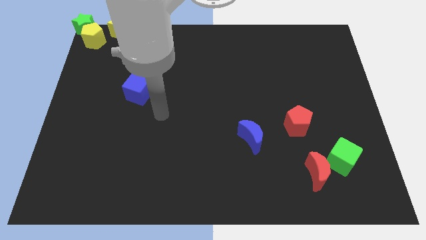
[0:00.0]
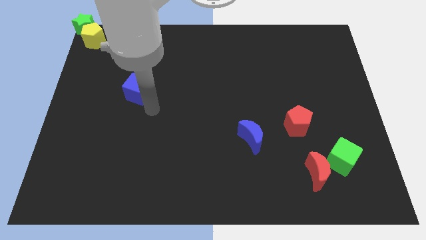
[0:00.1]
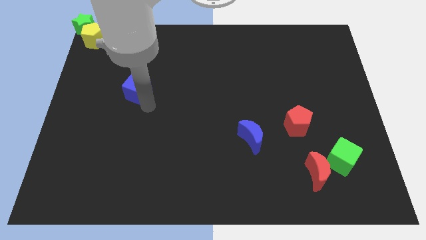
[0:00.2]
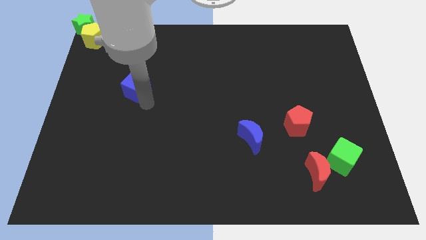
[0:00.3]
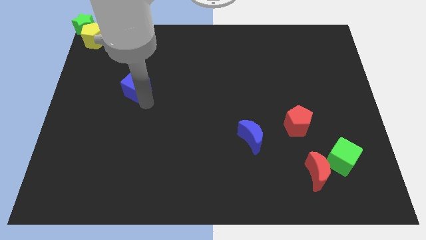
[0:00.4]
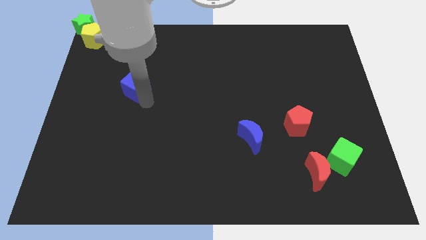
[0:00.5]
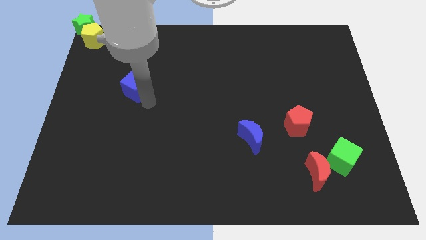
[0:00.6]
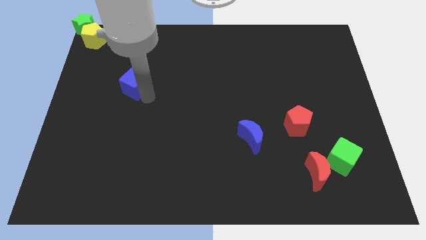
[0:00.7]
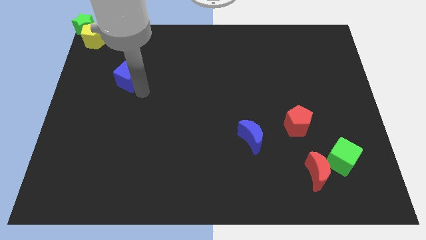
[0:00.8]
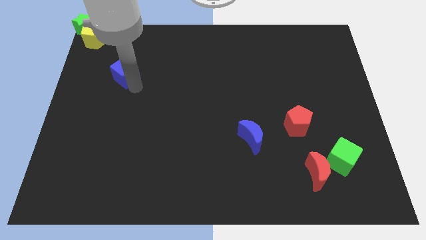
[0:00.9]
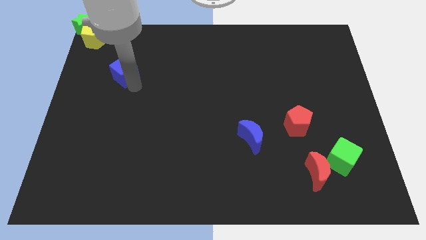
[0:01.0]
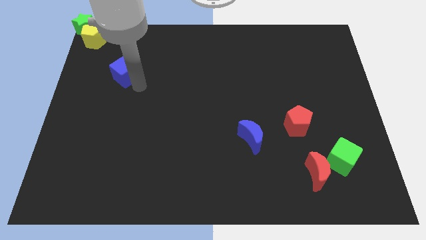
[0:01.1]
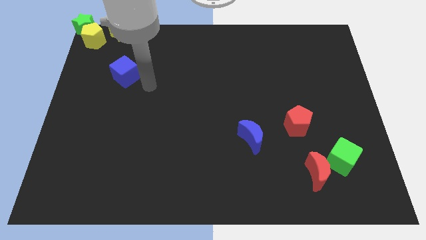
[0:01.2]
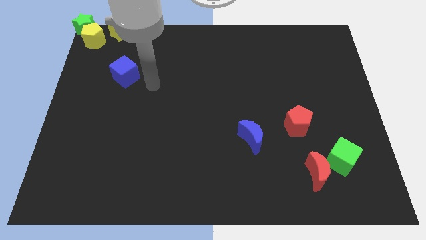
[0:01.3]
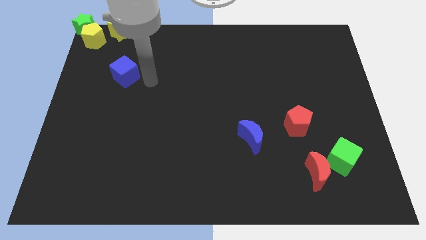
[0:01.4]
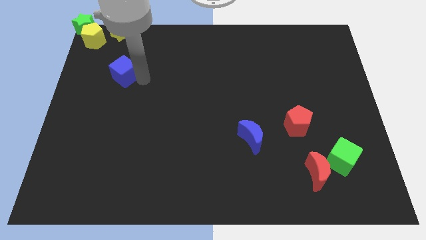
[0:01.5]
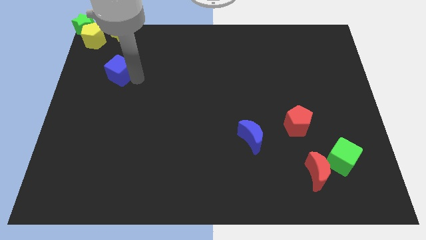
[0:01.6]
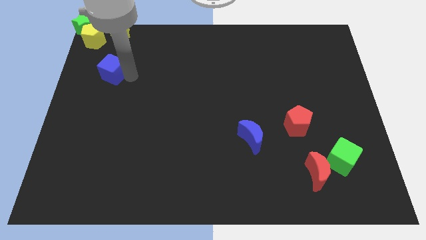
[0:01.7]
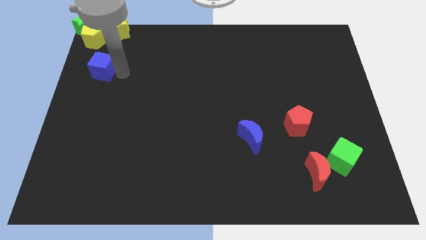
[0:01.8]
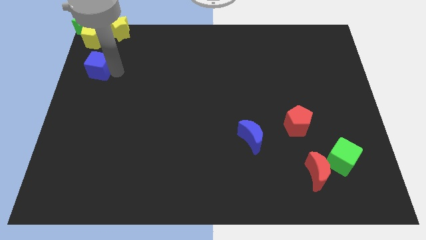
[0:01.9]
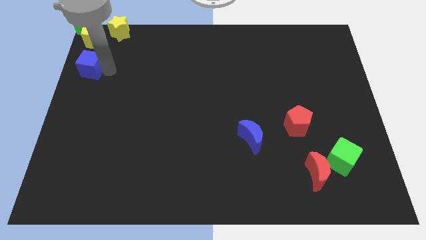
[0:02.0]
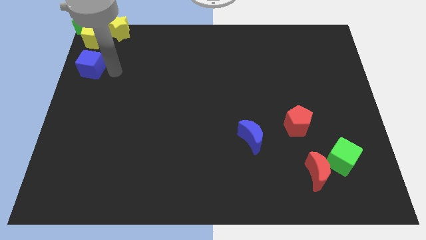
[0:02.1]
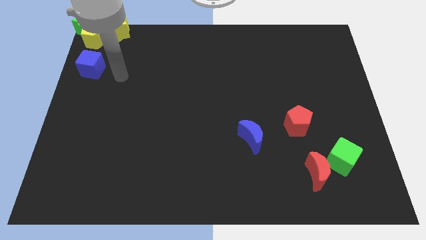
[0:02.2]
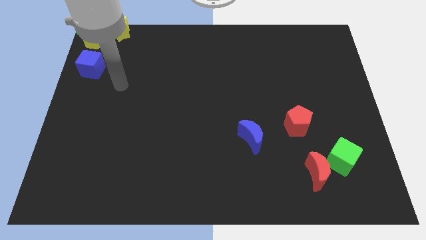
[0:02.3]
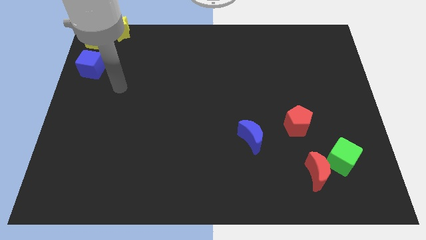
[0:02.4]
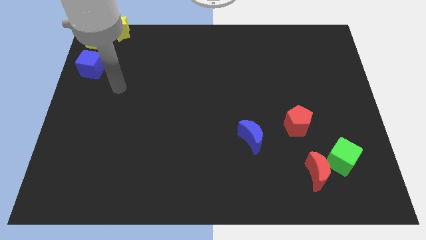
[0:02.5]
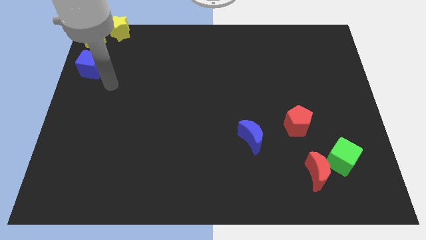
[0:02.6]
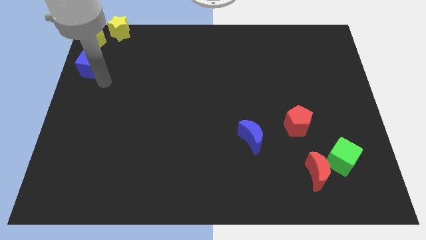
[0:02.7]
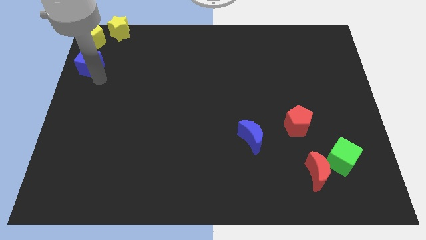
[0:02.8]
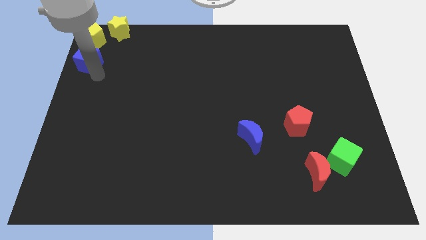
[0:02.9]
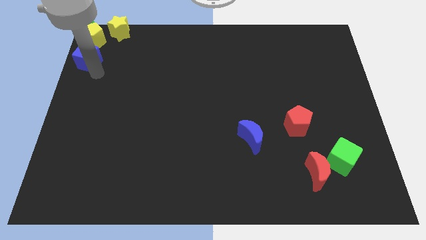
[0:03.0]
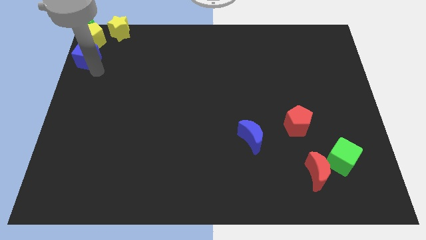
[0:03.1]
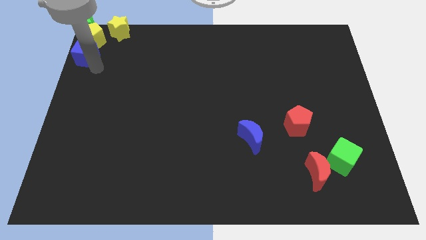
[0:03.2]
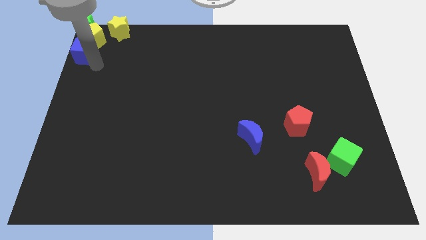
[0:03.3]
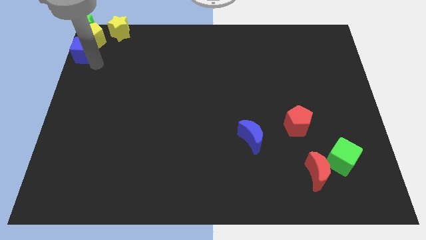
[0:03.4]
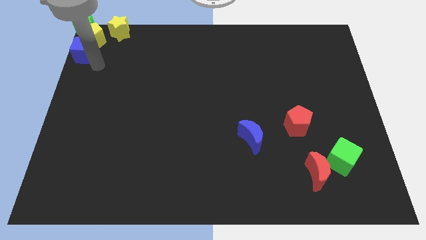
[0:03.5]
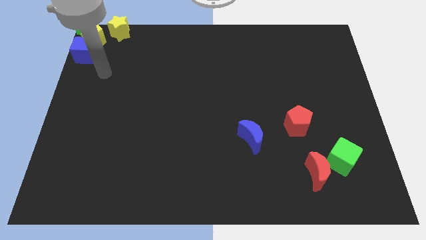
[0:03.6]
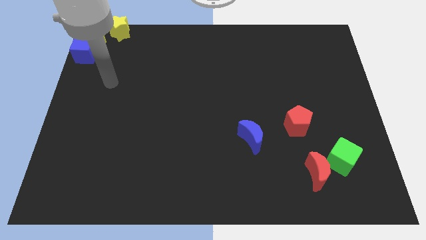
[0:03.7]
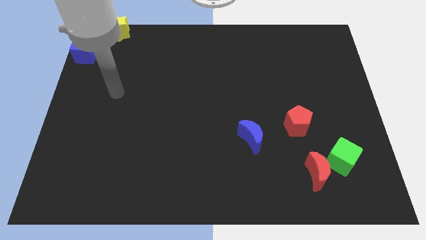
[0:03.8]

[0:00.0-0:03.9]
place blue cube to the bottom of yellow pentagon

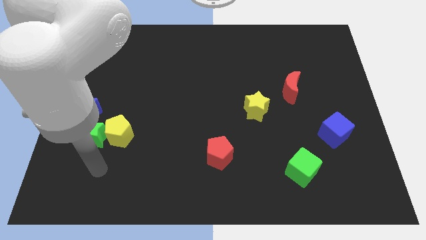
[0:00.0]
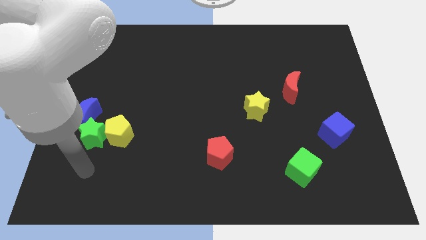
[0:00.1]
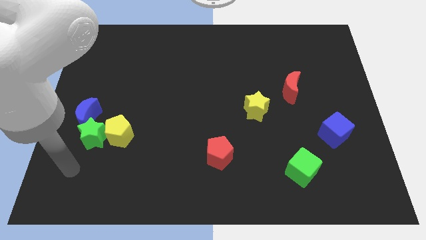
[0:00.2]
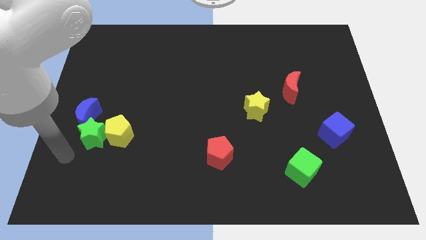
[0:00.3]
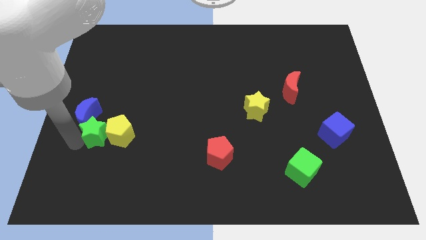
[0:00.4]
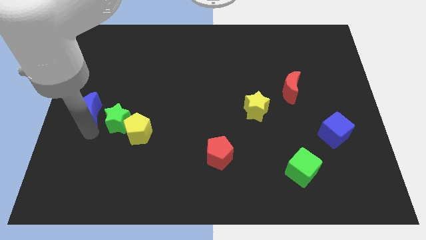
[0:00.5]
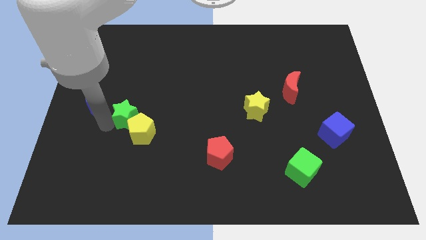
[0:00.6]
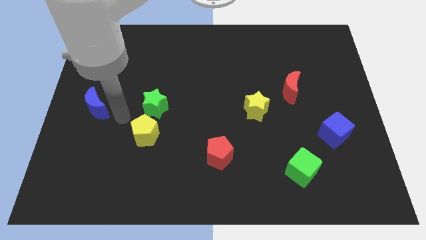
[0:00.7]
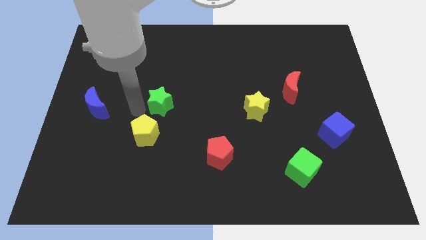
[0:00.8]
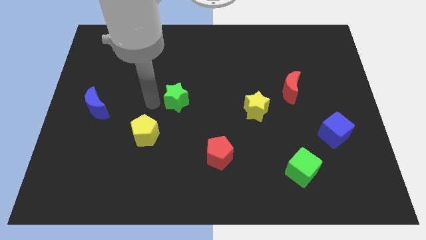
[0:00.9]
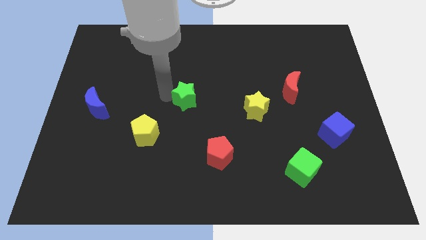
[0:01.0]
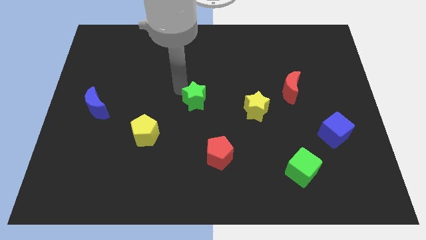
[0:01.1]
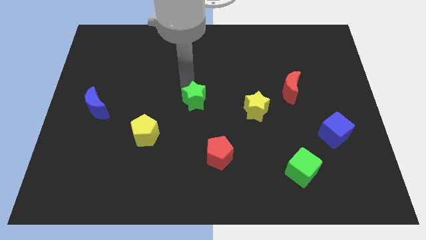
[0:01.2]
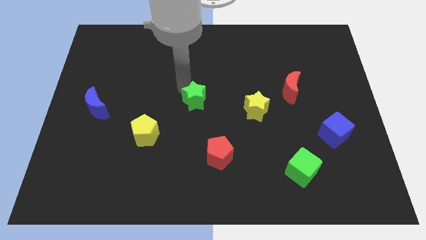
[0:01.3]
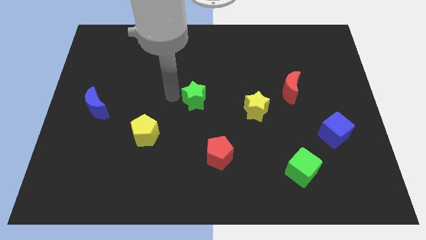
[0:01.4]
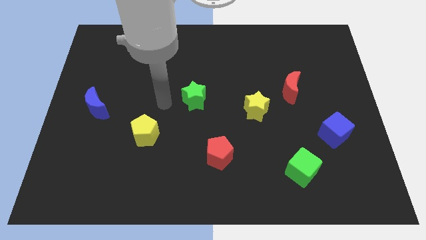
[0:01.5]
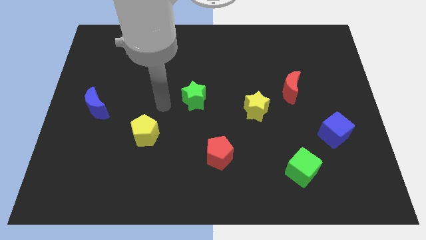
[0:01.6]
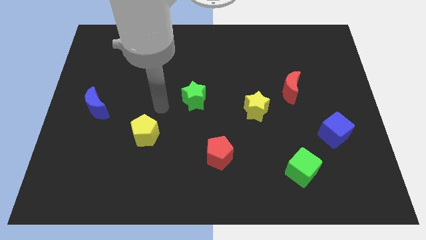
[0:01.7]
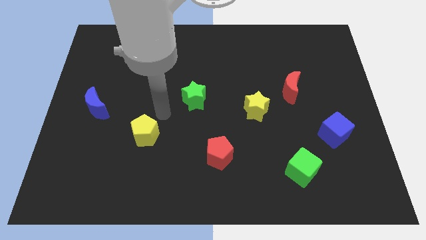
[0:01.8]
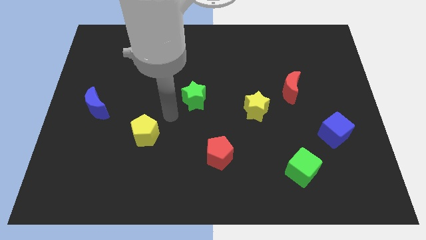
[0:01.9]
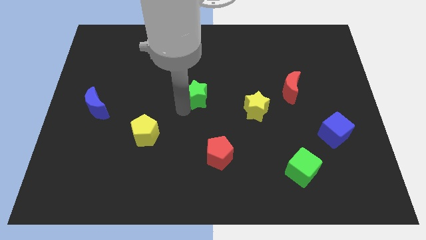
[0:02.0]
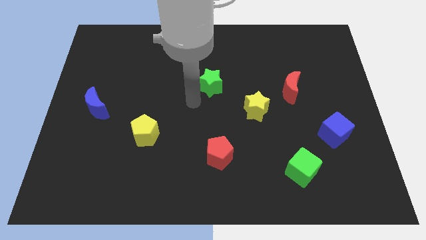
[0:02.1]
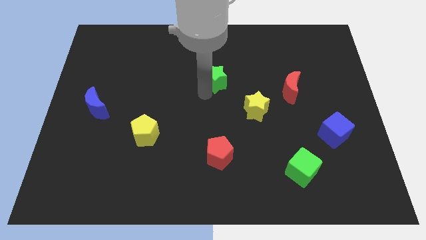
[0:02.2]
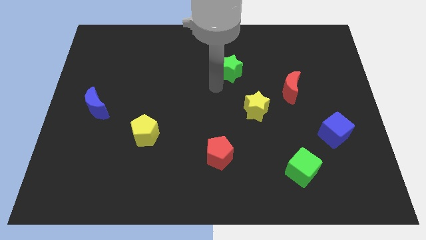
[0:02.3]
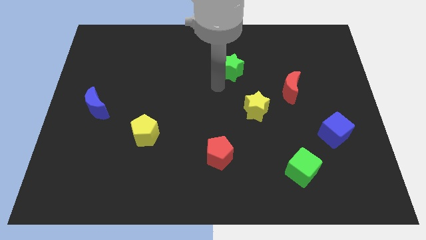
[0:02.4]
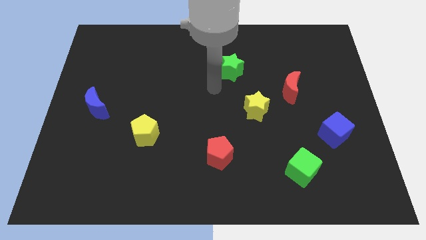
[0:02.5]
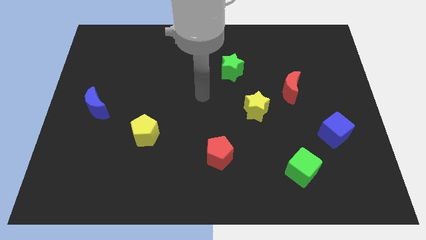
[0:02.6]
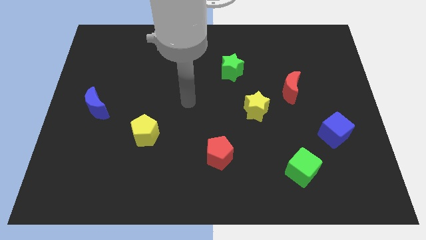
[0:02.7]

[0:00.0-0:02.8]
separate the green star diagonal above the yellow star

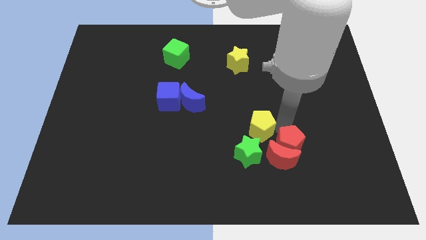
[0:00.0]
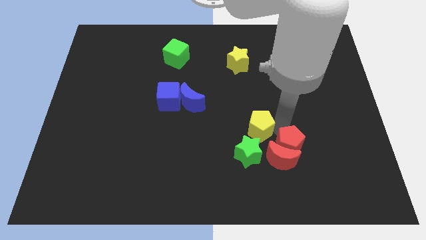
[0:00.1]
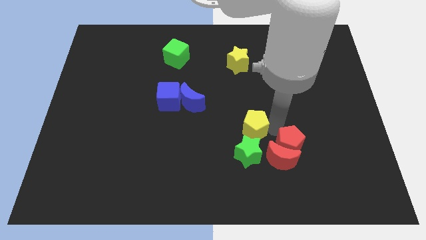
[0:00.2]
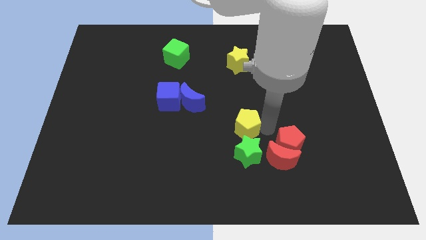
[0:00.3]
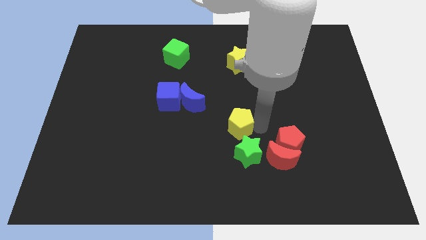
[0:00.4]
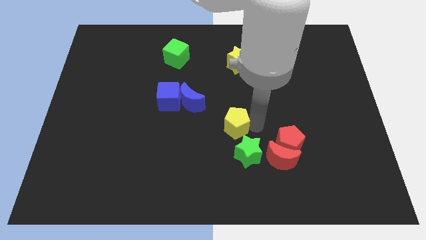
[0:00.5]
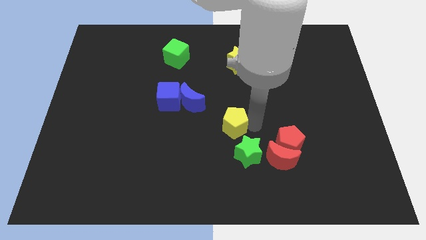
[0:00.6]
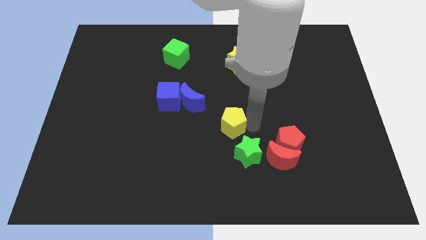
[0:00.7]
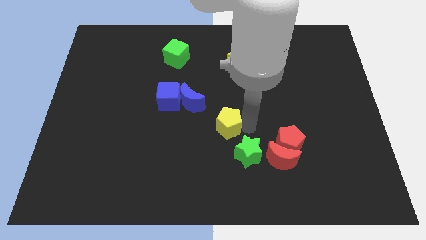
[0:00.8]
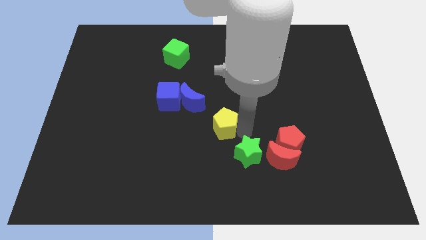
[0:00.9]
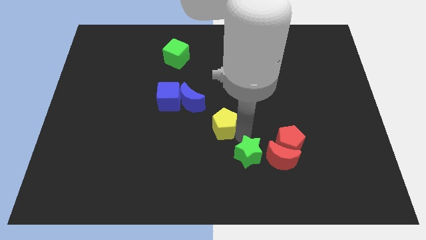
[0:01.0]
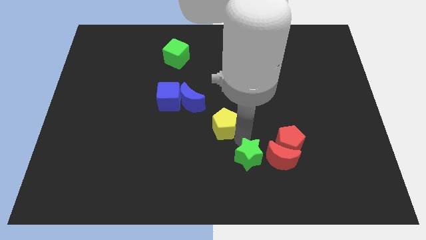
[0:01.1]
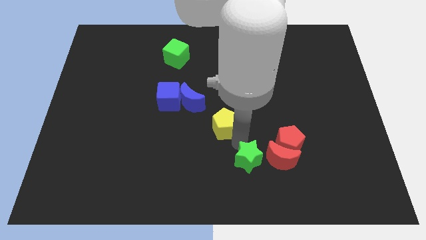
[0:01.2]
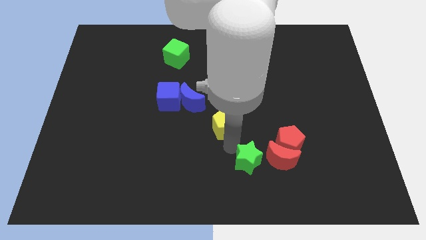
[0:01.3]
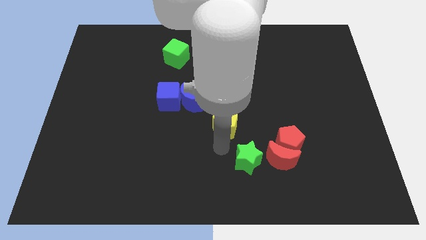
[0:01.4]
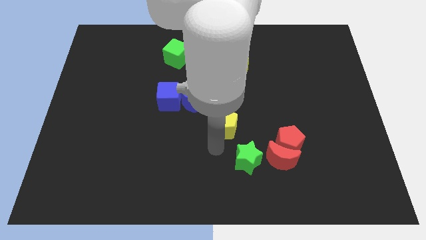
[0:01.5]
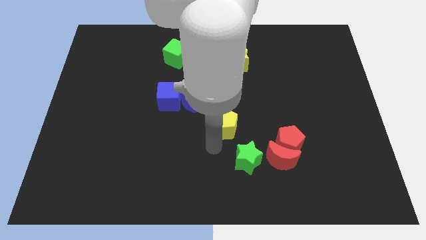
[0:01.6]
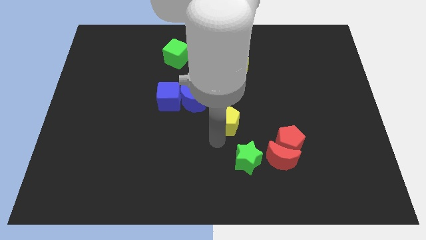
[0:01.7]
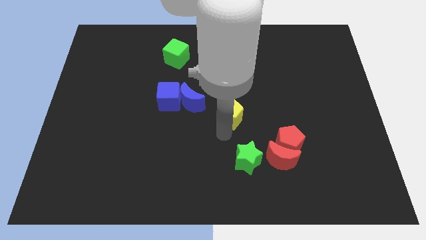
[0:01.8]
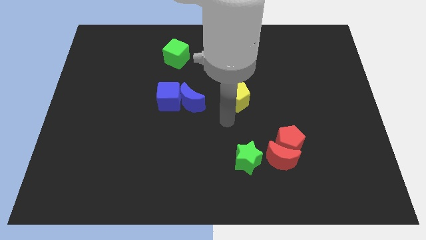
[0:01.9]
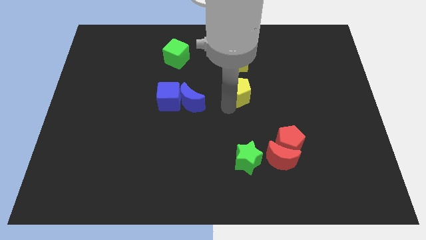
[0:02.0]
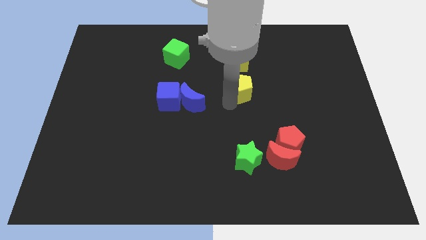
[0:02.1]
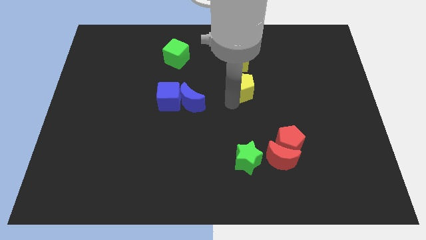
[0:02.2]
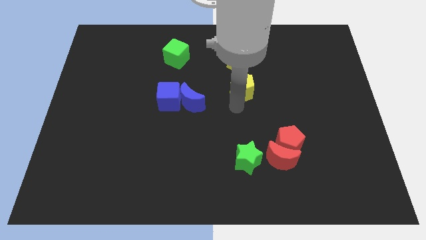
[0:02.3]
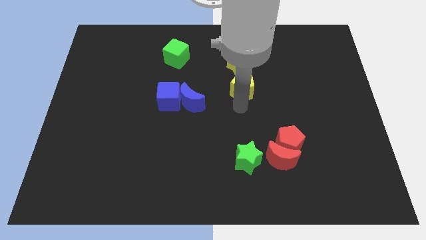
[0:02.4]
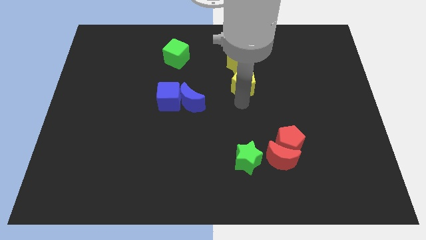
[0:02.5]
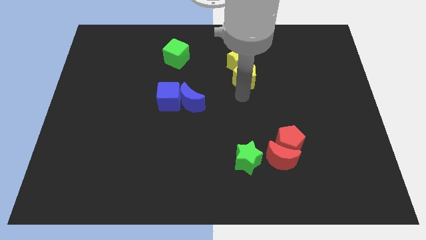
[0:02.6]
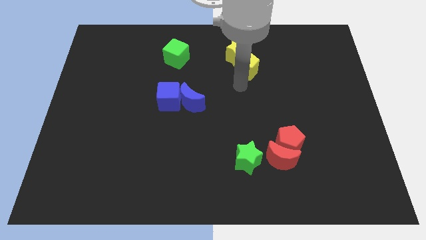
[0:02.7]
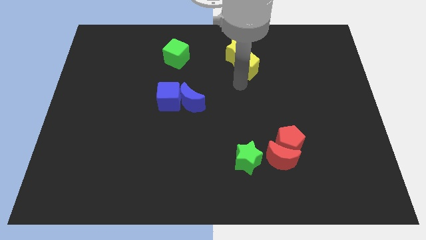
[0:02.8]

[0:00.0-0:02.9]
push the yellow pentagon upwards
